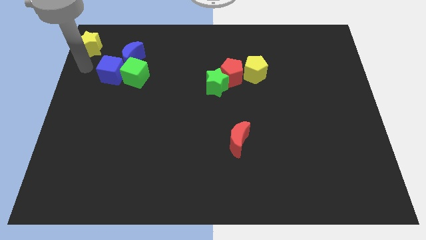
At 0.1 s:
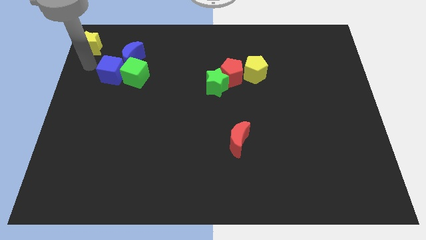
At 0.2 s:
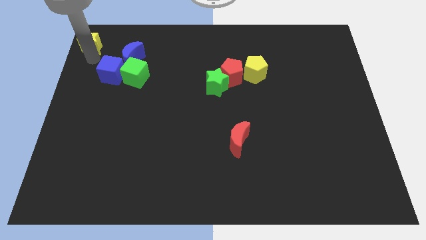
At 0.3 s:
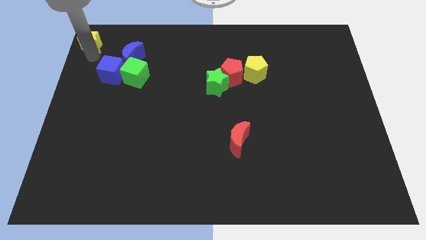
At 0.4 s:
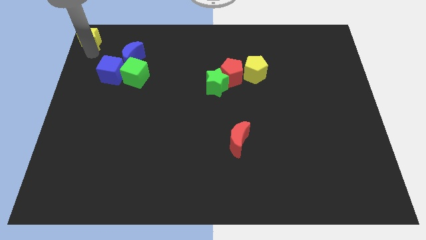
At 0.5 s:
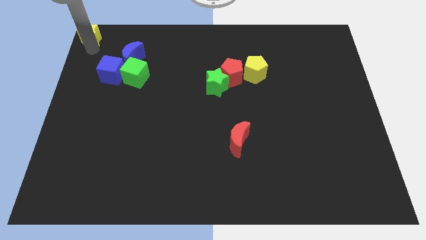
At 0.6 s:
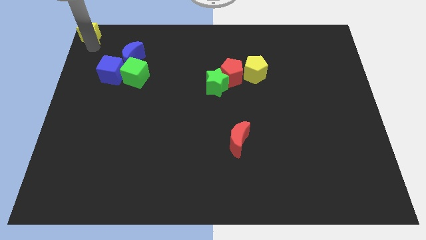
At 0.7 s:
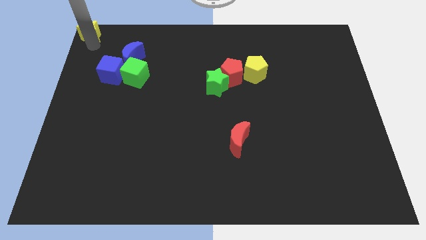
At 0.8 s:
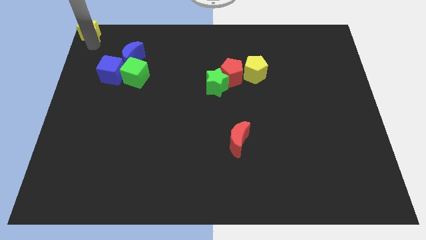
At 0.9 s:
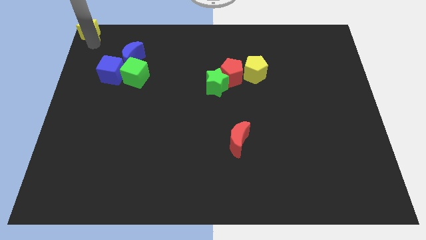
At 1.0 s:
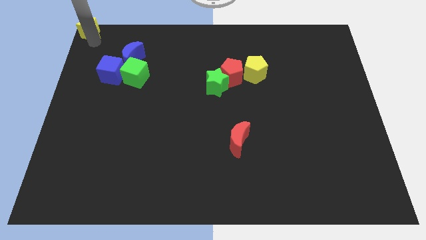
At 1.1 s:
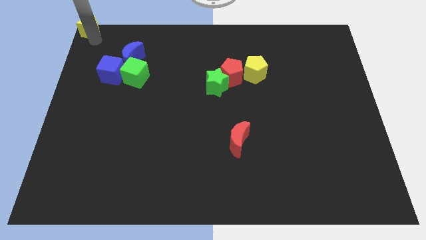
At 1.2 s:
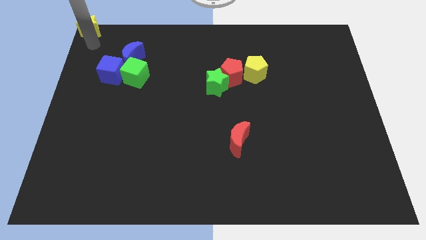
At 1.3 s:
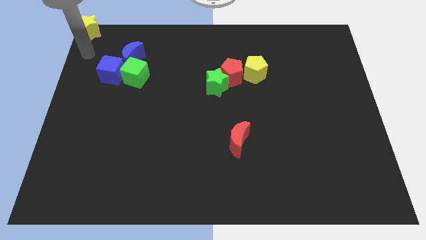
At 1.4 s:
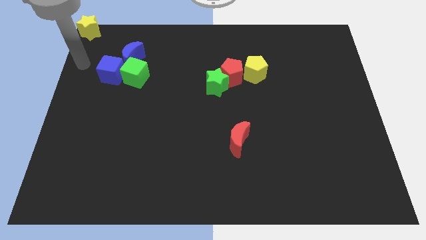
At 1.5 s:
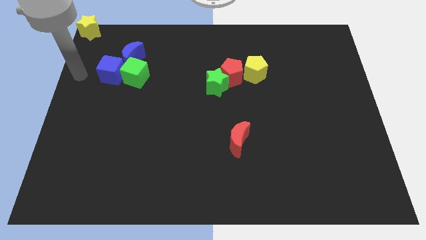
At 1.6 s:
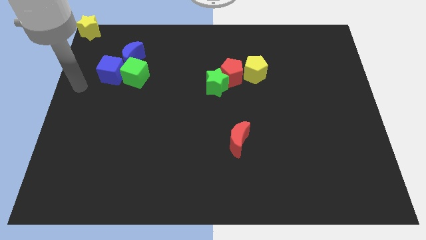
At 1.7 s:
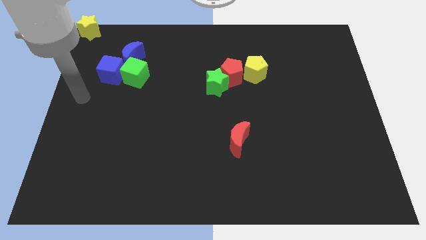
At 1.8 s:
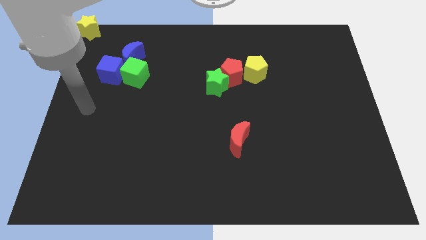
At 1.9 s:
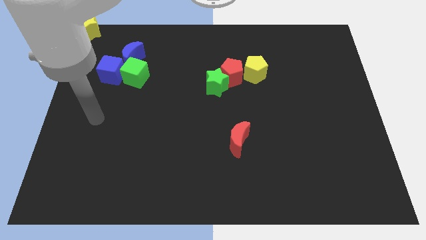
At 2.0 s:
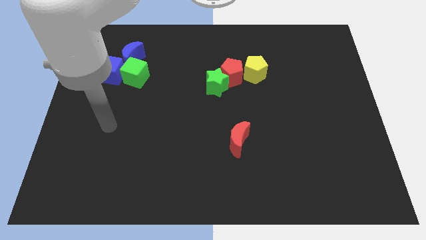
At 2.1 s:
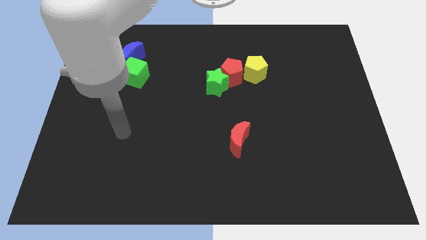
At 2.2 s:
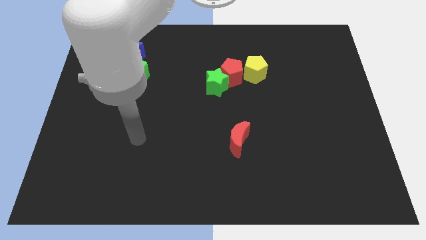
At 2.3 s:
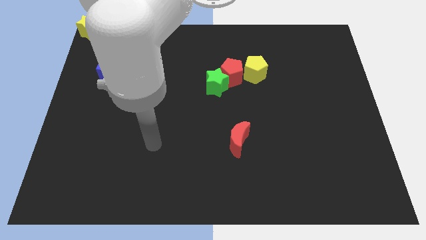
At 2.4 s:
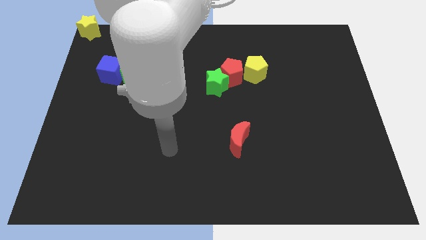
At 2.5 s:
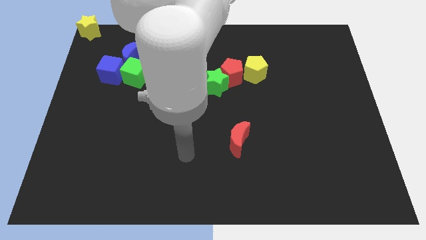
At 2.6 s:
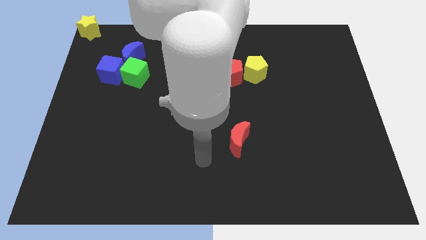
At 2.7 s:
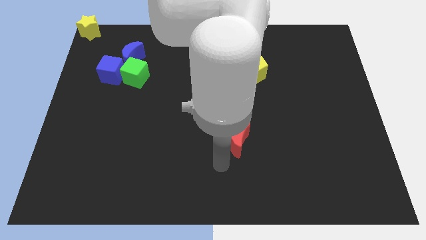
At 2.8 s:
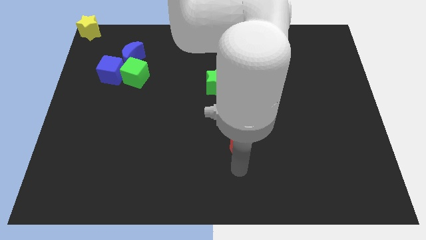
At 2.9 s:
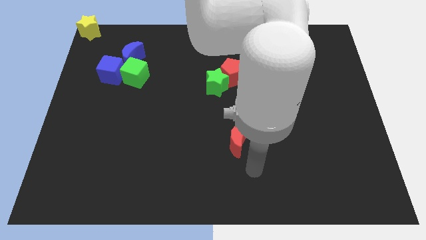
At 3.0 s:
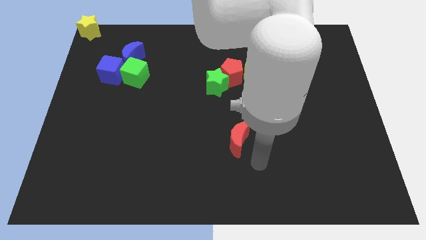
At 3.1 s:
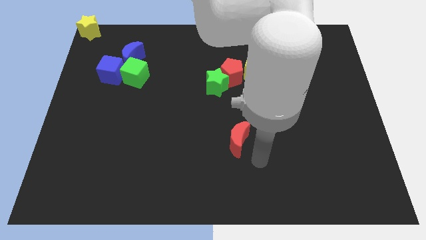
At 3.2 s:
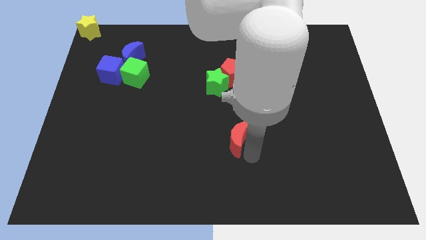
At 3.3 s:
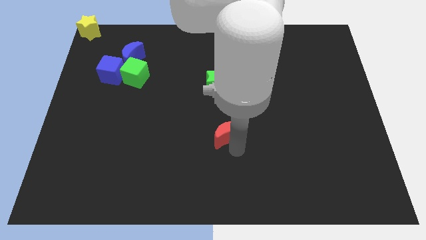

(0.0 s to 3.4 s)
place the arm right to the red moon

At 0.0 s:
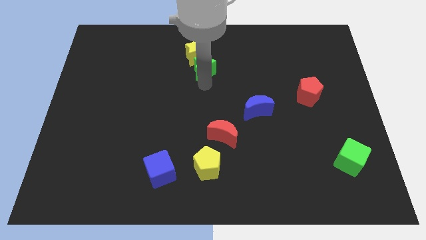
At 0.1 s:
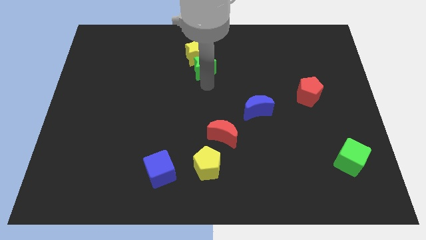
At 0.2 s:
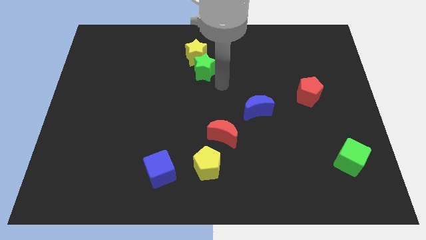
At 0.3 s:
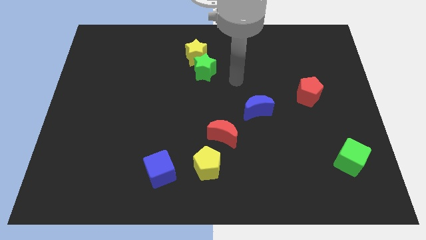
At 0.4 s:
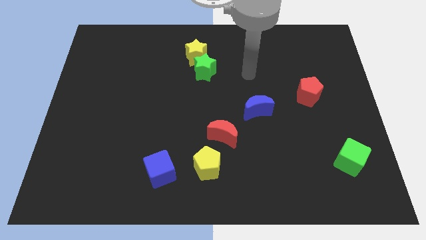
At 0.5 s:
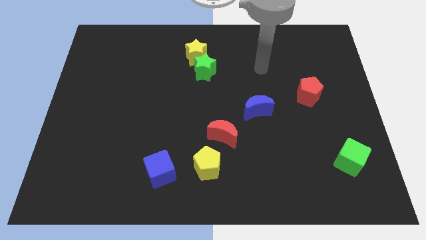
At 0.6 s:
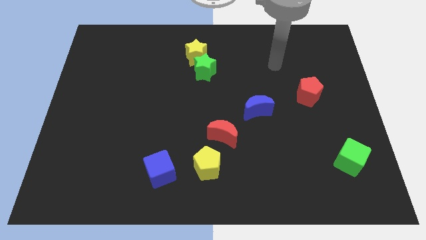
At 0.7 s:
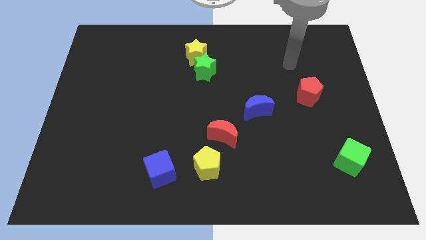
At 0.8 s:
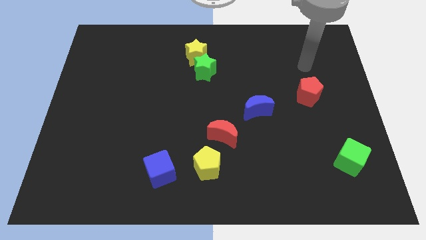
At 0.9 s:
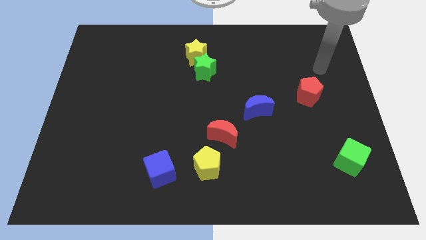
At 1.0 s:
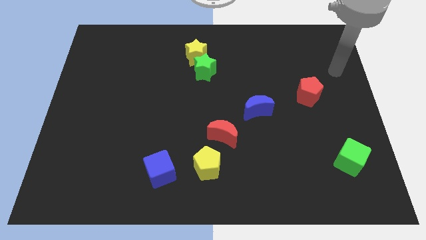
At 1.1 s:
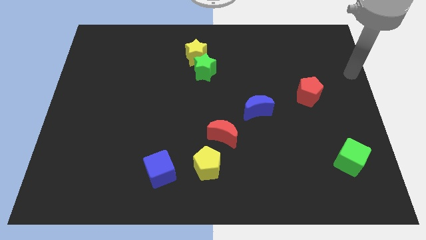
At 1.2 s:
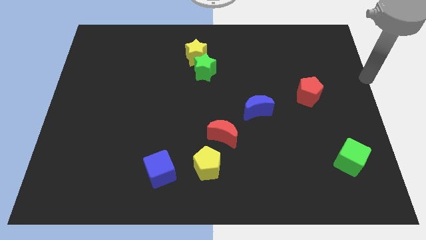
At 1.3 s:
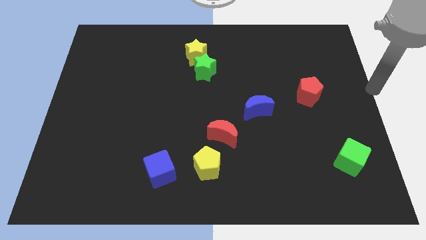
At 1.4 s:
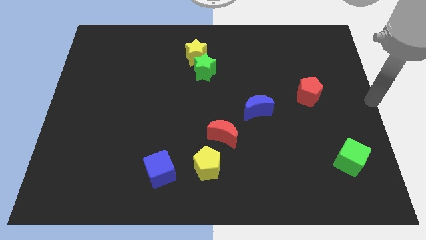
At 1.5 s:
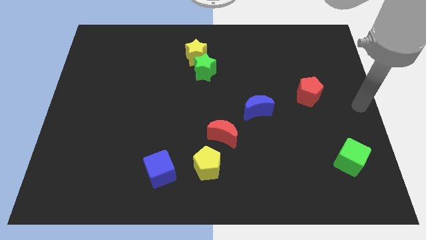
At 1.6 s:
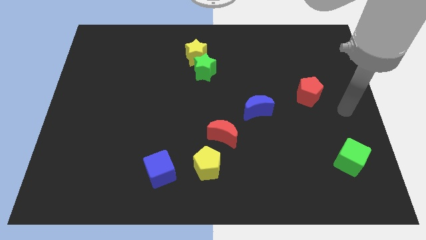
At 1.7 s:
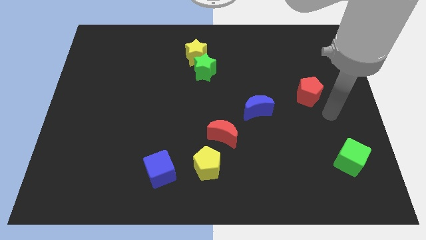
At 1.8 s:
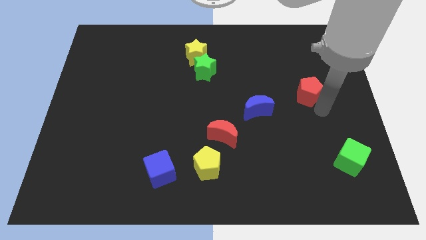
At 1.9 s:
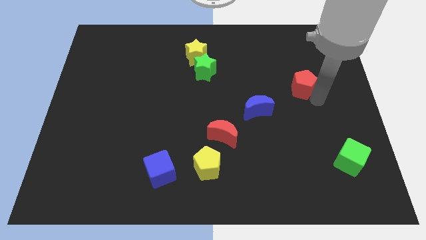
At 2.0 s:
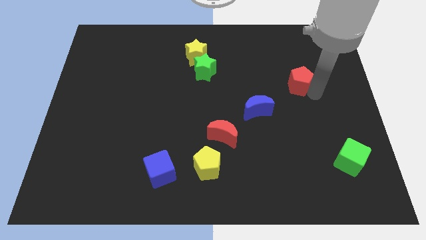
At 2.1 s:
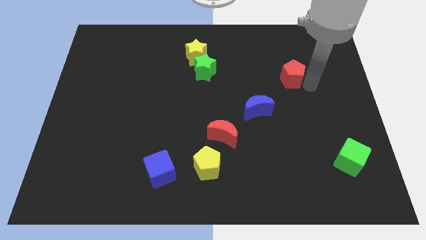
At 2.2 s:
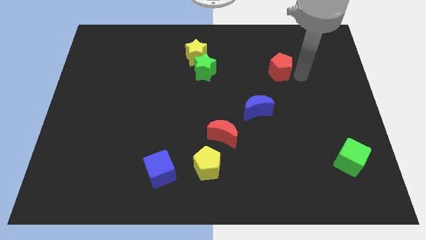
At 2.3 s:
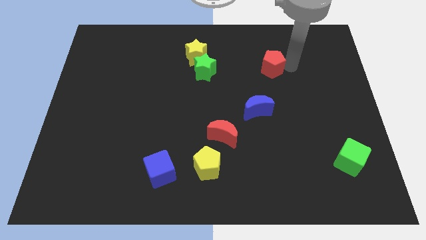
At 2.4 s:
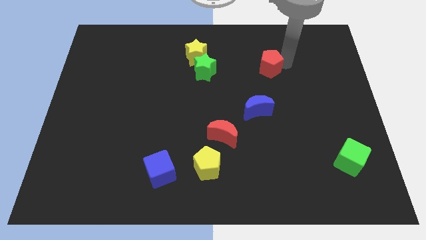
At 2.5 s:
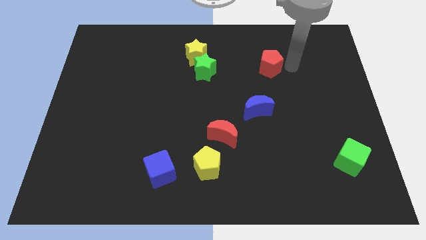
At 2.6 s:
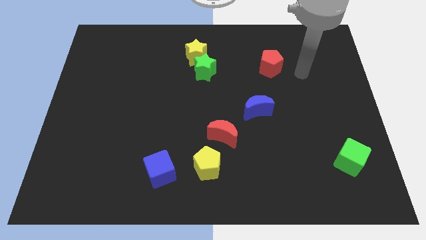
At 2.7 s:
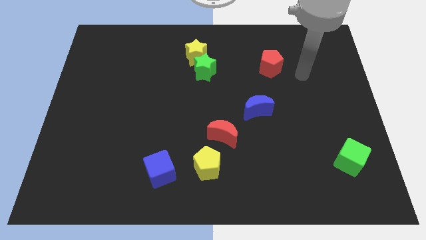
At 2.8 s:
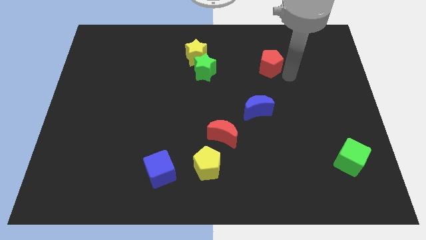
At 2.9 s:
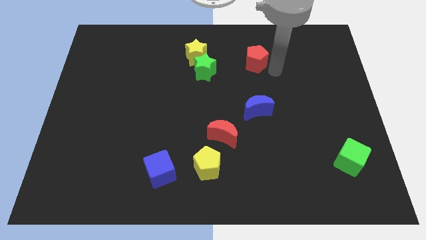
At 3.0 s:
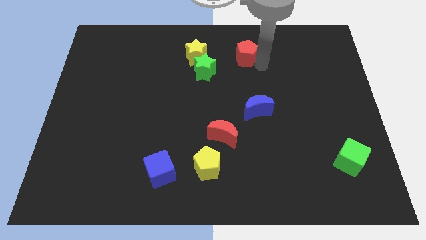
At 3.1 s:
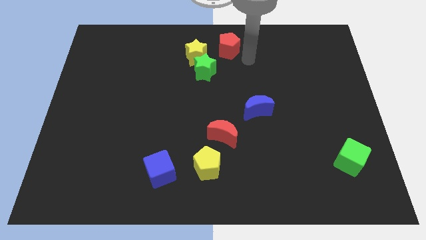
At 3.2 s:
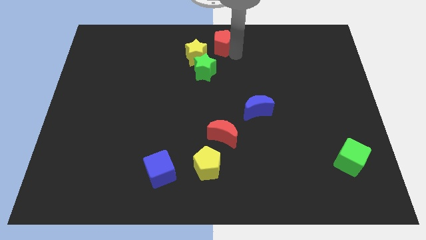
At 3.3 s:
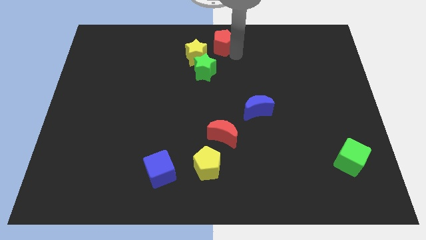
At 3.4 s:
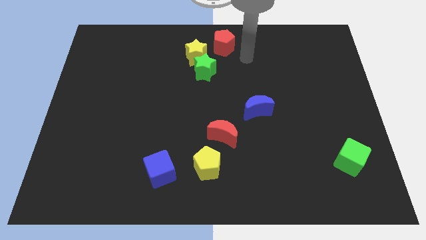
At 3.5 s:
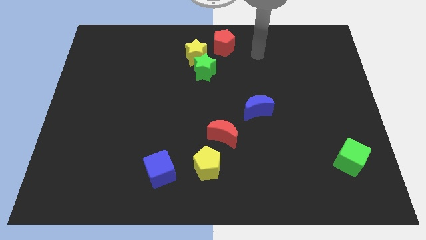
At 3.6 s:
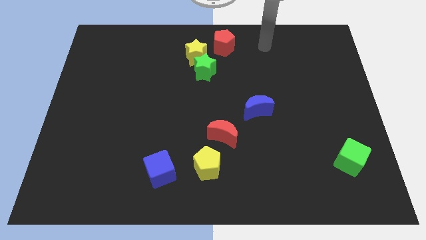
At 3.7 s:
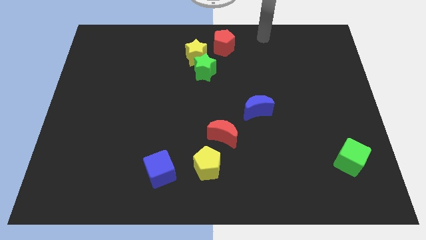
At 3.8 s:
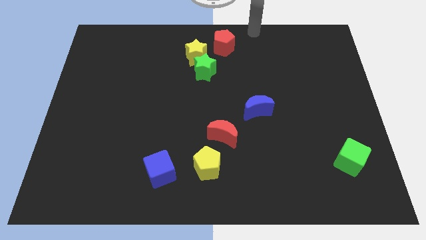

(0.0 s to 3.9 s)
move the red pentagon to the top center of the board

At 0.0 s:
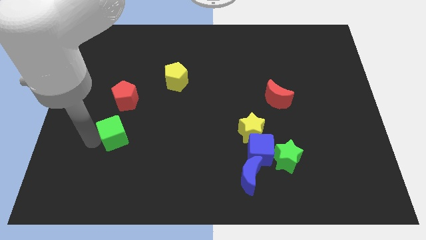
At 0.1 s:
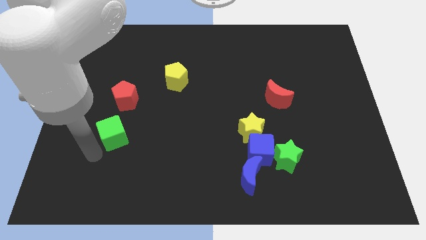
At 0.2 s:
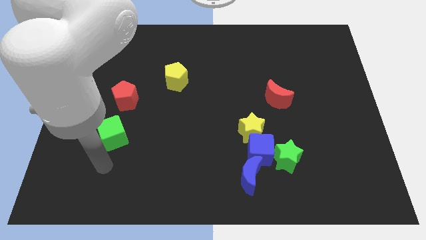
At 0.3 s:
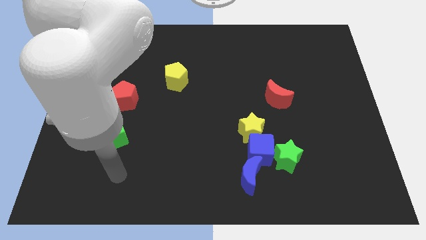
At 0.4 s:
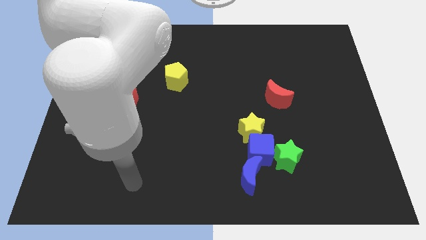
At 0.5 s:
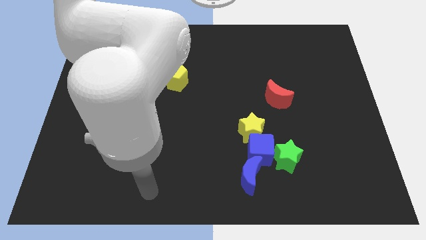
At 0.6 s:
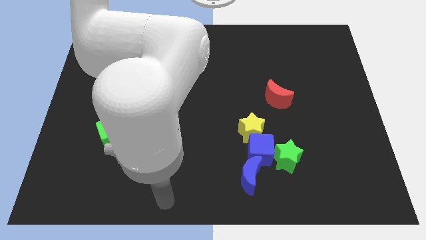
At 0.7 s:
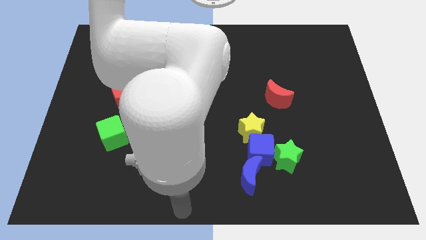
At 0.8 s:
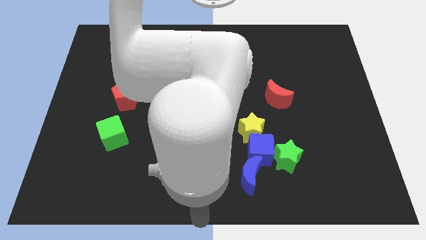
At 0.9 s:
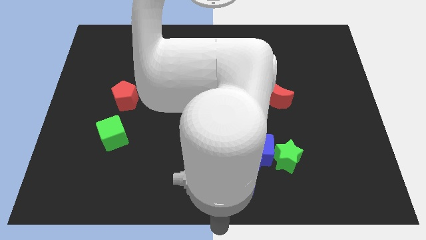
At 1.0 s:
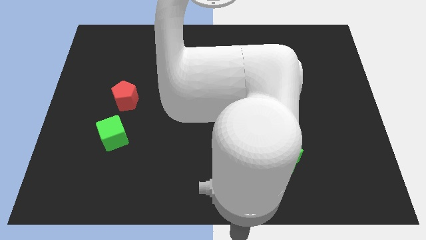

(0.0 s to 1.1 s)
move your arm away from green cube

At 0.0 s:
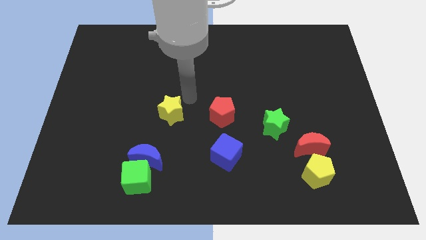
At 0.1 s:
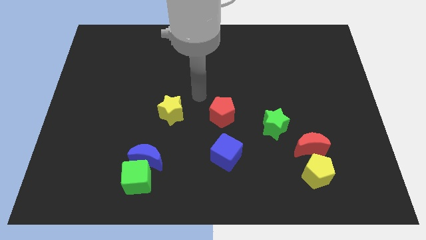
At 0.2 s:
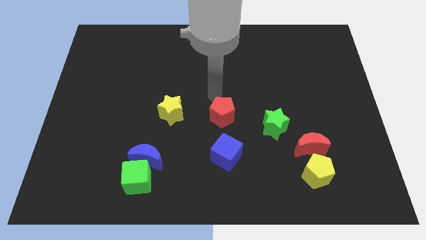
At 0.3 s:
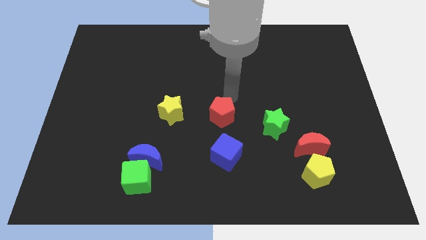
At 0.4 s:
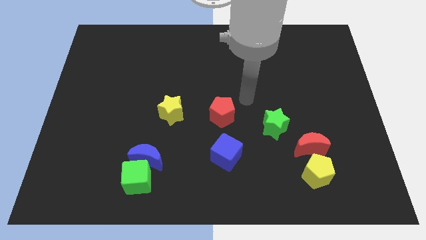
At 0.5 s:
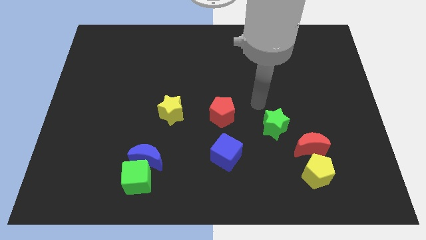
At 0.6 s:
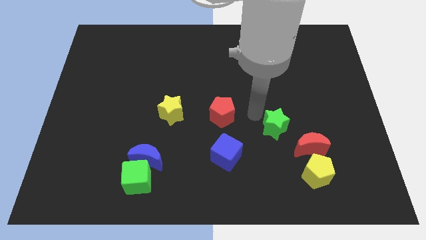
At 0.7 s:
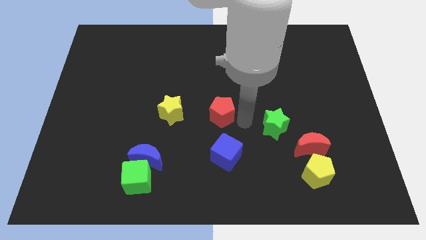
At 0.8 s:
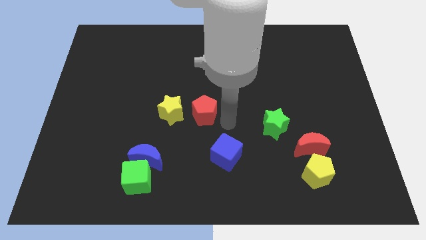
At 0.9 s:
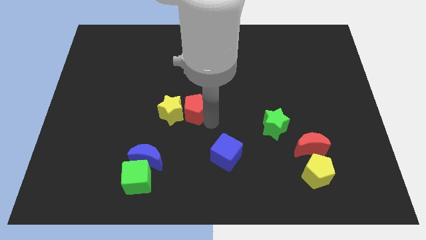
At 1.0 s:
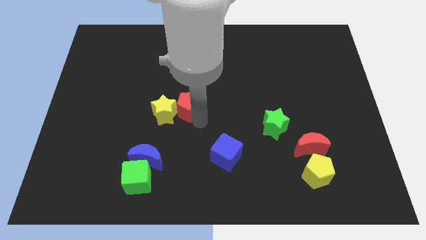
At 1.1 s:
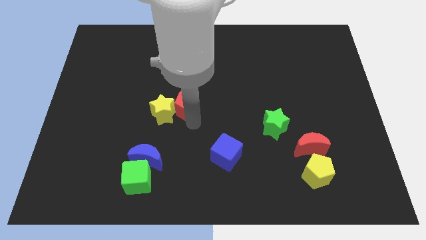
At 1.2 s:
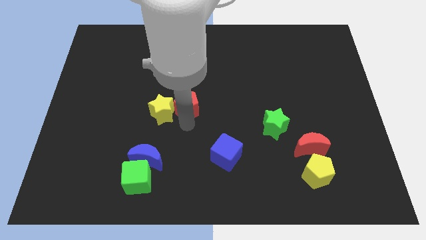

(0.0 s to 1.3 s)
slide the red pentago on the right side of the yellow star
